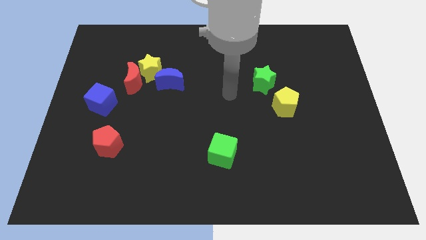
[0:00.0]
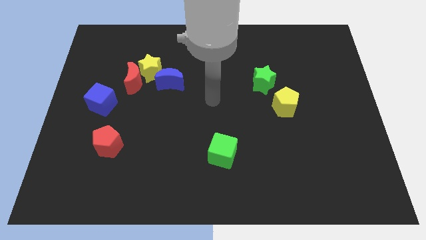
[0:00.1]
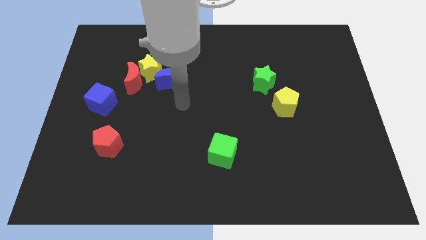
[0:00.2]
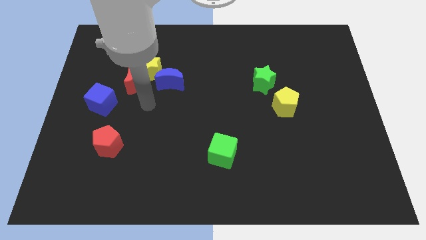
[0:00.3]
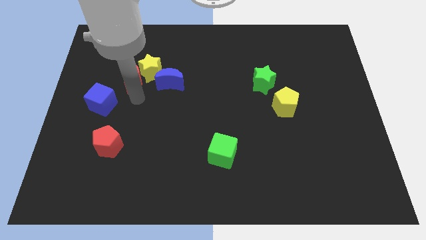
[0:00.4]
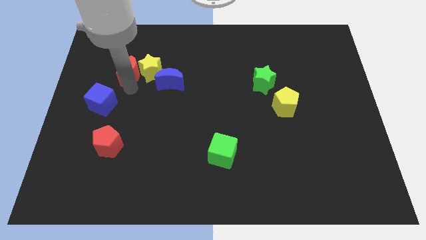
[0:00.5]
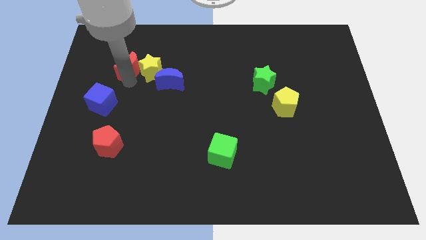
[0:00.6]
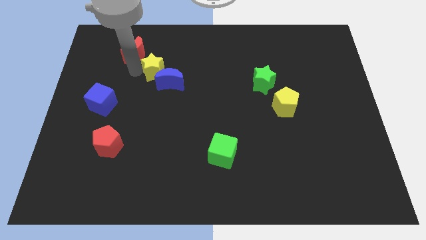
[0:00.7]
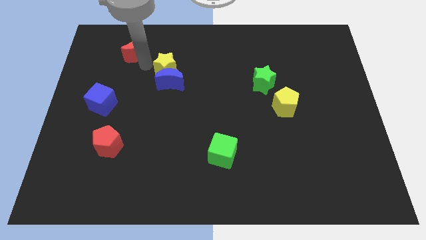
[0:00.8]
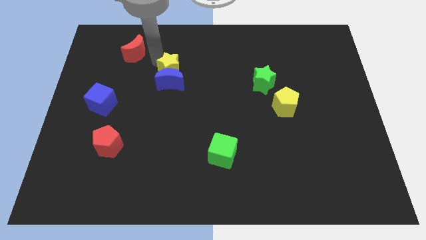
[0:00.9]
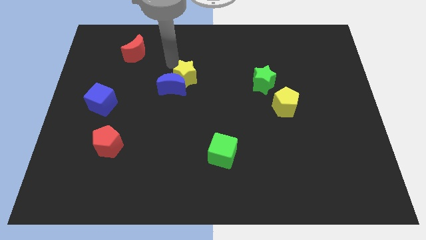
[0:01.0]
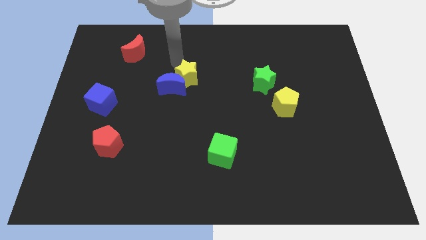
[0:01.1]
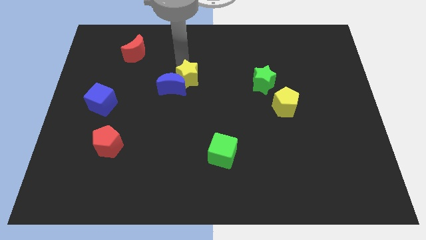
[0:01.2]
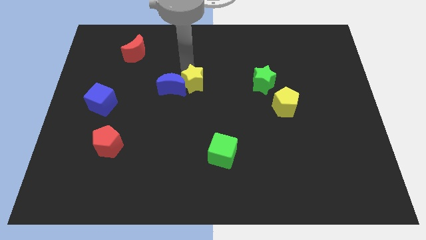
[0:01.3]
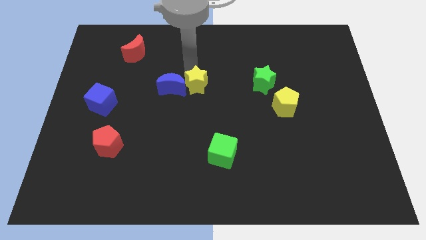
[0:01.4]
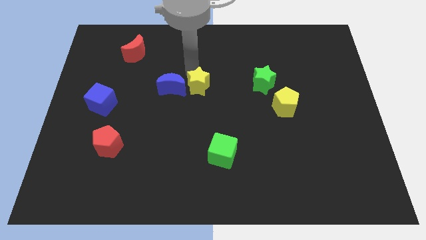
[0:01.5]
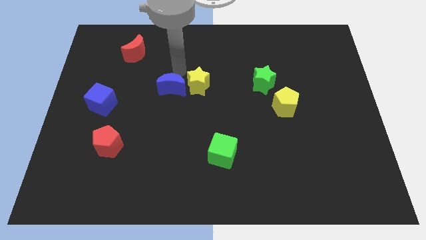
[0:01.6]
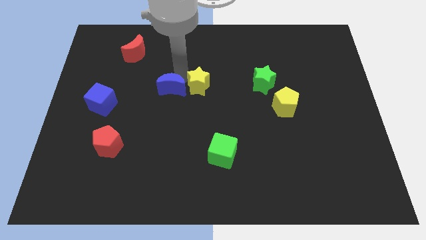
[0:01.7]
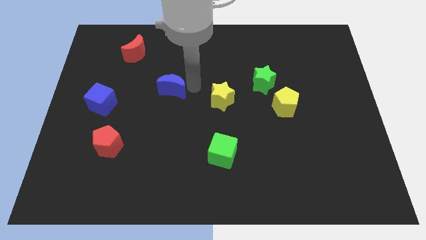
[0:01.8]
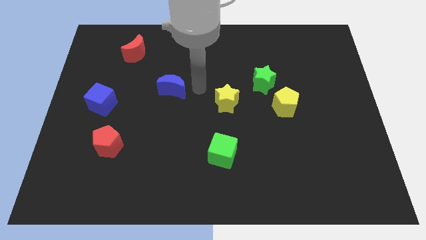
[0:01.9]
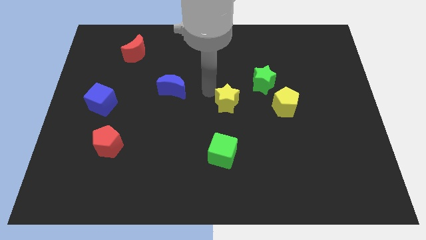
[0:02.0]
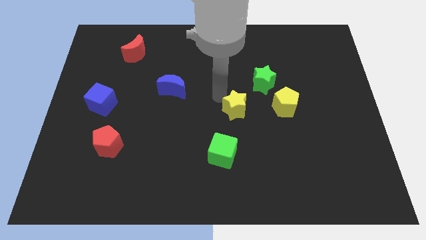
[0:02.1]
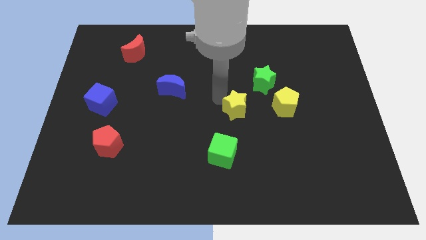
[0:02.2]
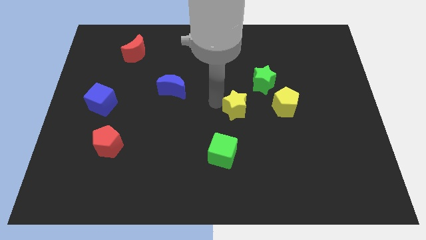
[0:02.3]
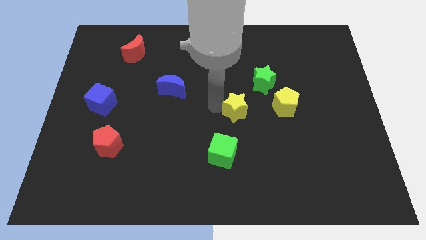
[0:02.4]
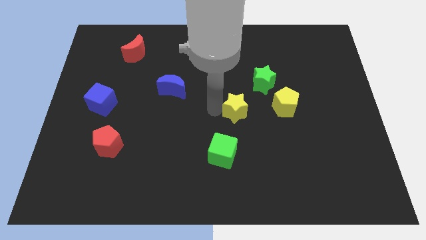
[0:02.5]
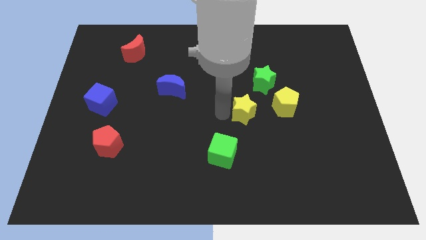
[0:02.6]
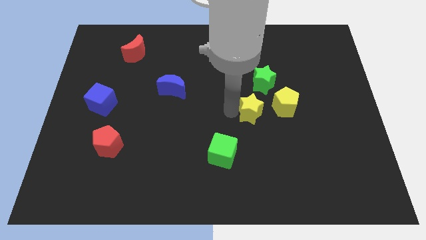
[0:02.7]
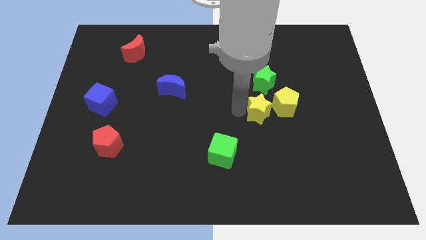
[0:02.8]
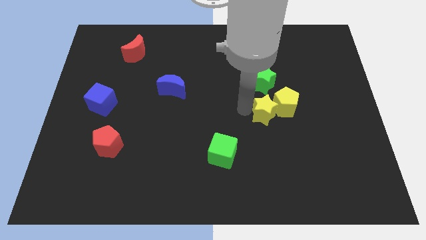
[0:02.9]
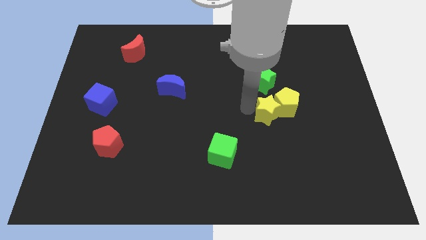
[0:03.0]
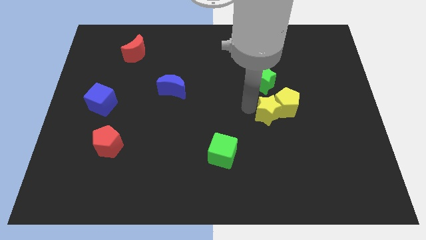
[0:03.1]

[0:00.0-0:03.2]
put the yellow star towards the yellow pentagon

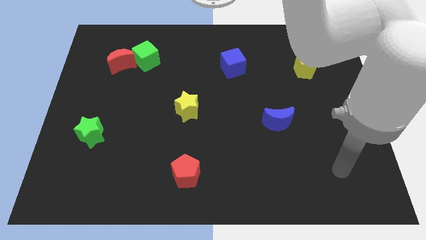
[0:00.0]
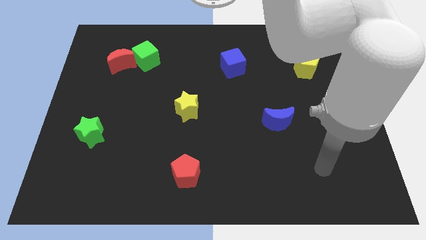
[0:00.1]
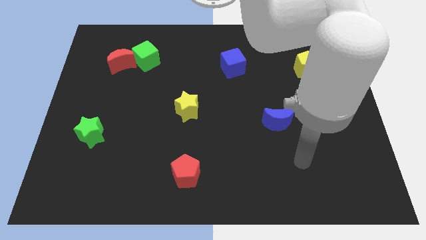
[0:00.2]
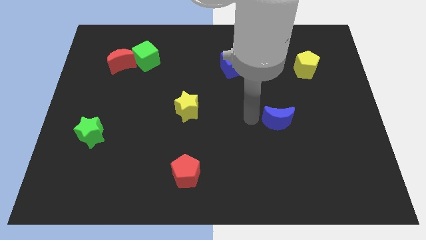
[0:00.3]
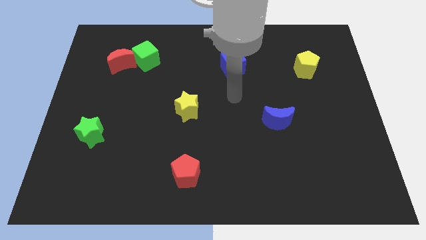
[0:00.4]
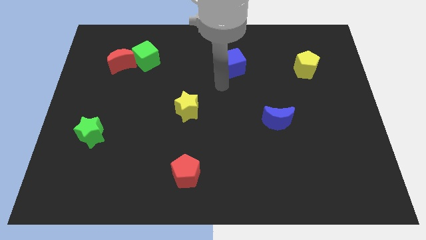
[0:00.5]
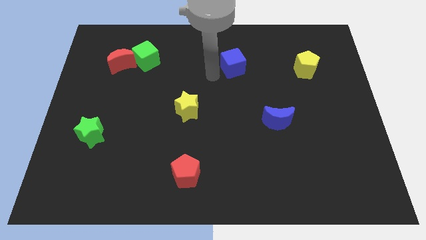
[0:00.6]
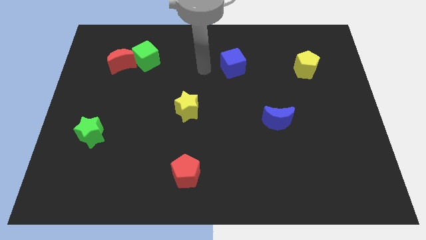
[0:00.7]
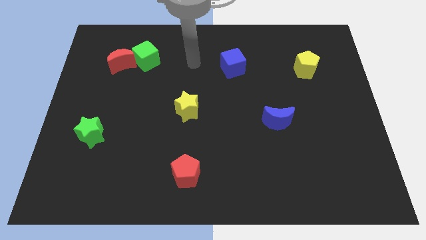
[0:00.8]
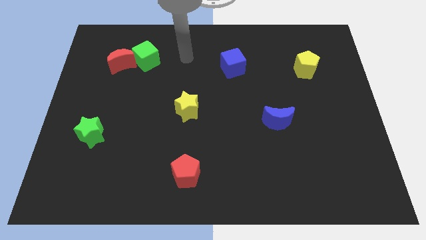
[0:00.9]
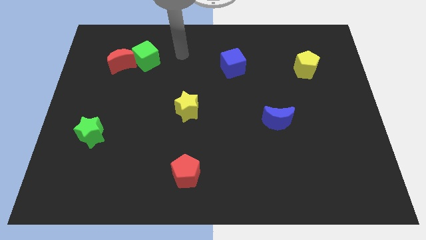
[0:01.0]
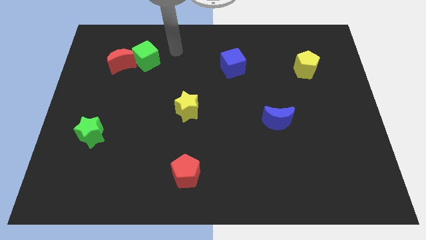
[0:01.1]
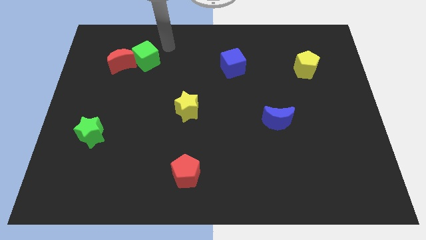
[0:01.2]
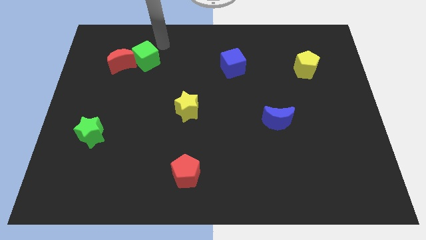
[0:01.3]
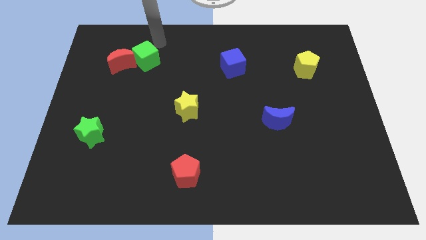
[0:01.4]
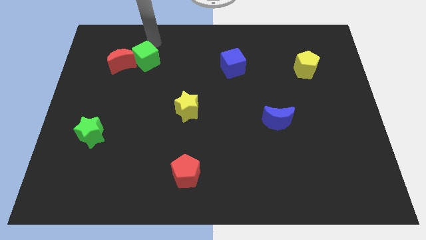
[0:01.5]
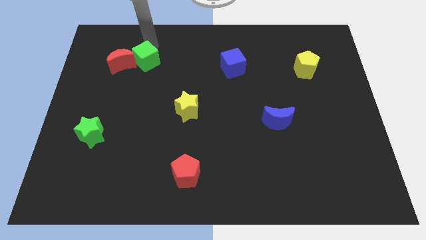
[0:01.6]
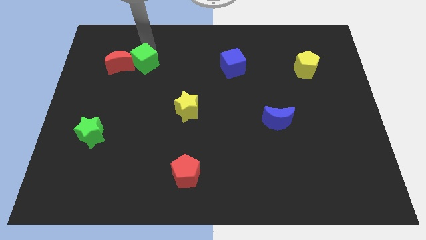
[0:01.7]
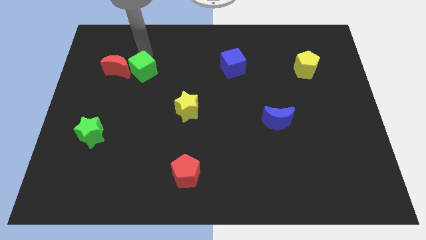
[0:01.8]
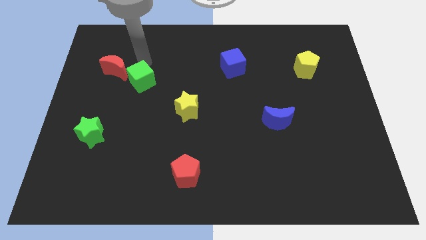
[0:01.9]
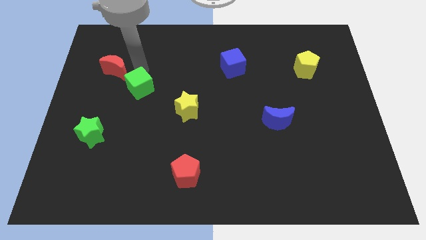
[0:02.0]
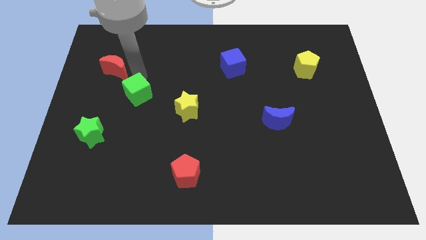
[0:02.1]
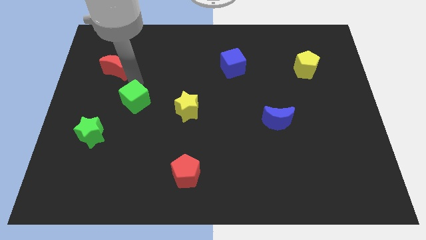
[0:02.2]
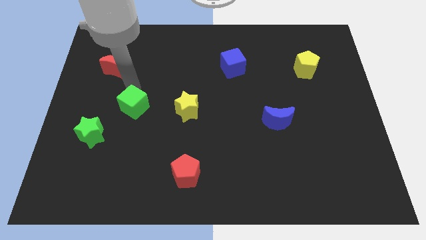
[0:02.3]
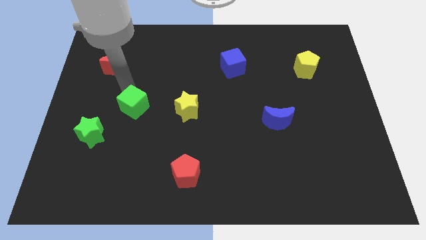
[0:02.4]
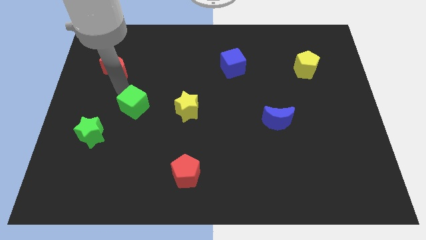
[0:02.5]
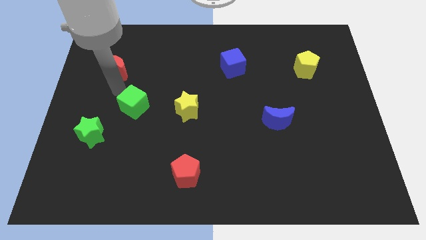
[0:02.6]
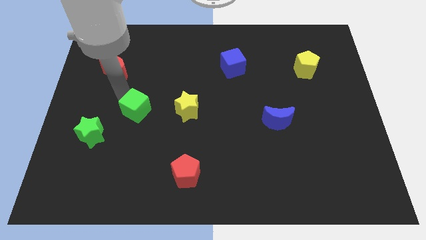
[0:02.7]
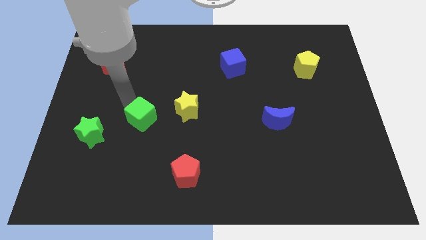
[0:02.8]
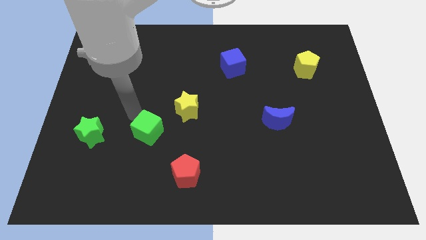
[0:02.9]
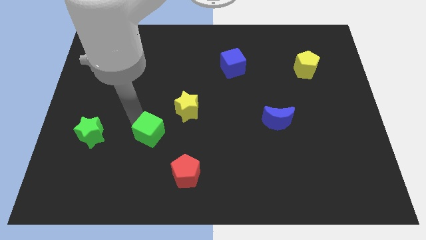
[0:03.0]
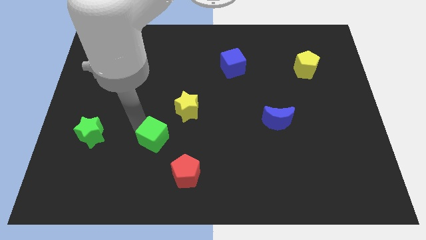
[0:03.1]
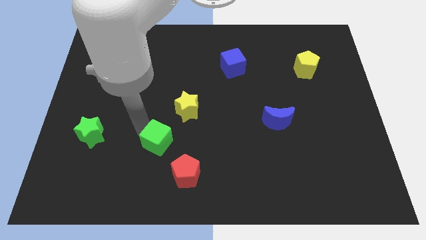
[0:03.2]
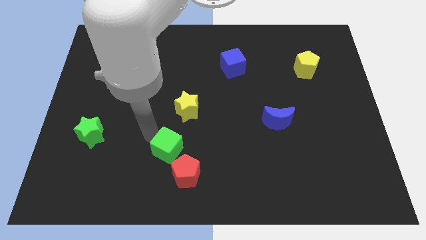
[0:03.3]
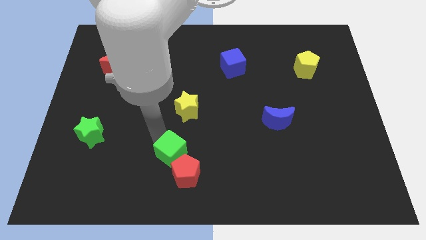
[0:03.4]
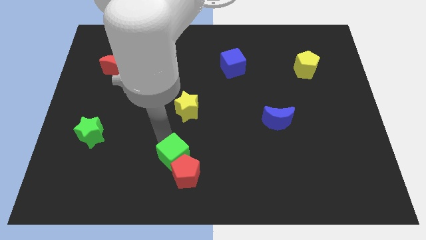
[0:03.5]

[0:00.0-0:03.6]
move the green cube towards the red pentagon

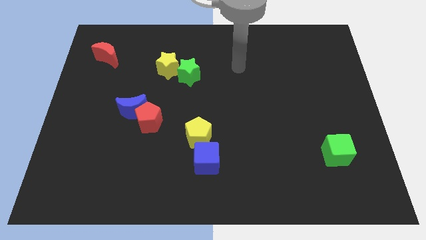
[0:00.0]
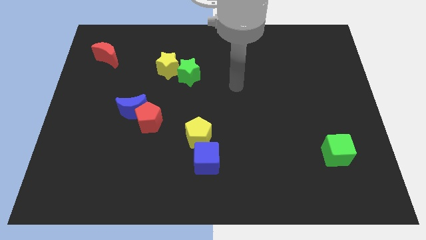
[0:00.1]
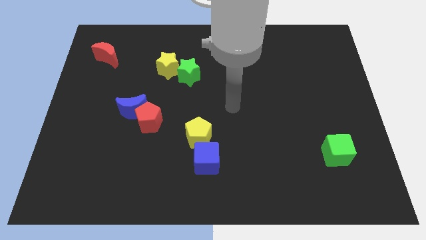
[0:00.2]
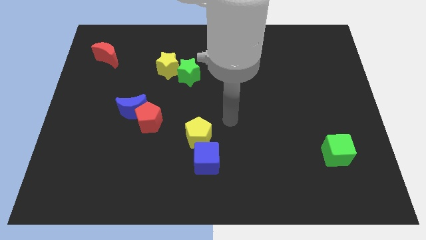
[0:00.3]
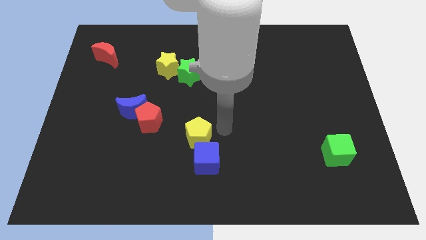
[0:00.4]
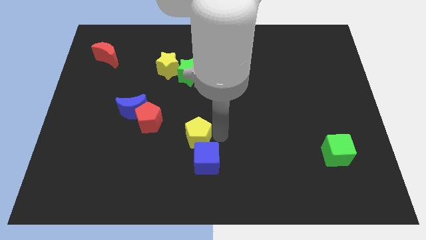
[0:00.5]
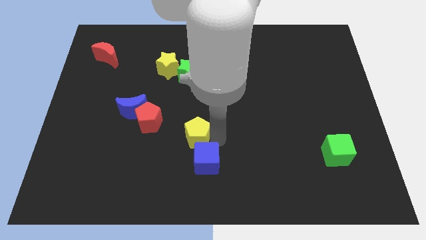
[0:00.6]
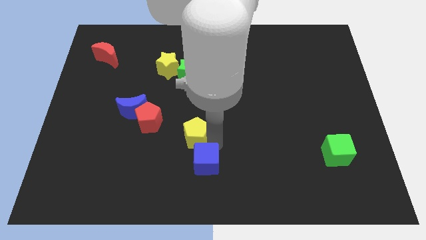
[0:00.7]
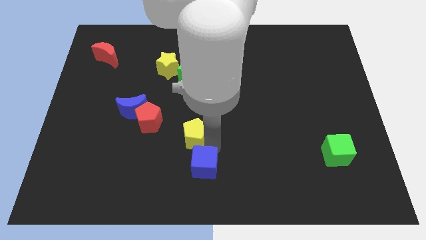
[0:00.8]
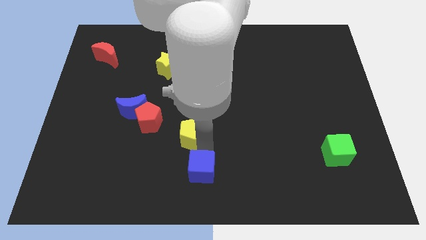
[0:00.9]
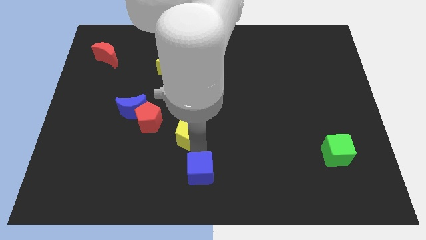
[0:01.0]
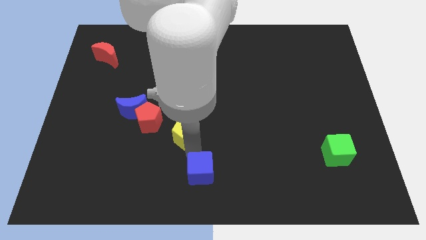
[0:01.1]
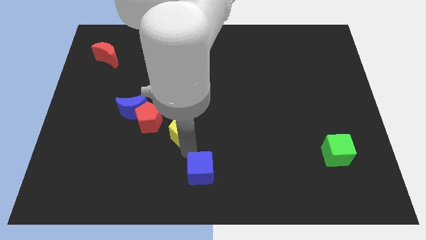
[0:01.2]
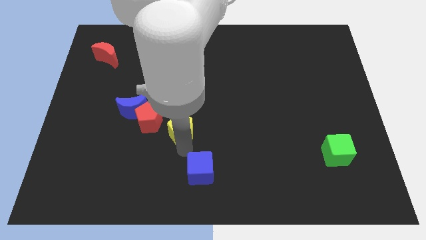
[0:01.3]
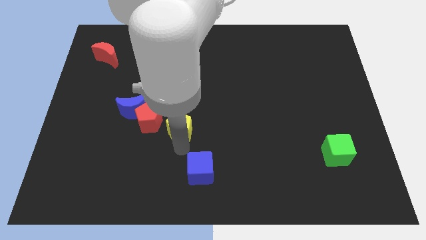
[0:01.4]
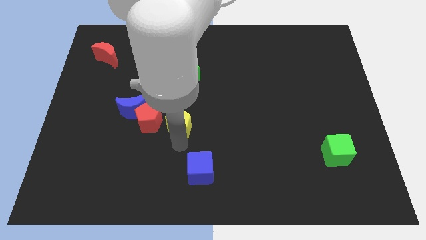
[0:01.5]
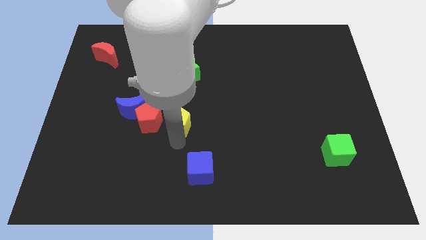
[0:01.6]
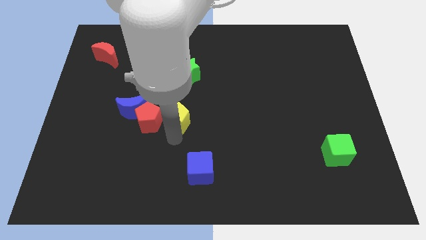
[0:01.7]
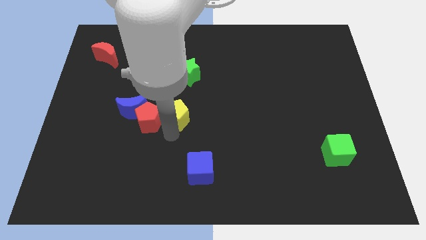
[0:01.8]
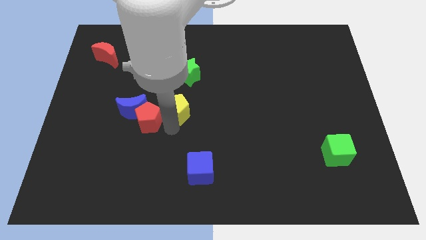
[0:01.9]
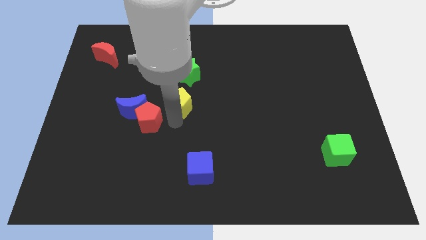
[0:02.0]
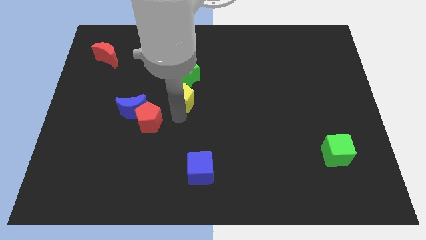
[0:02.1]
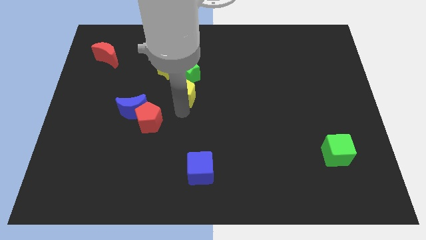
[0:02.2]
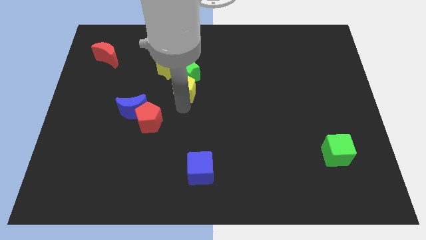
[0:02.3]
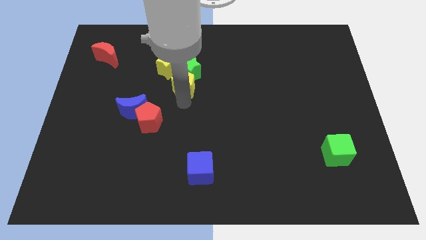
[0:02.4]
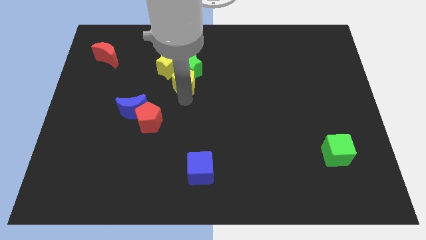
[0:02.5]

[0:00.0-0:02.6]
put the yellow pentagon to the green star
